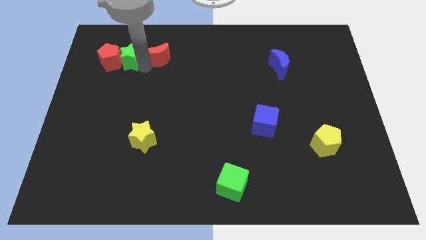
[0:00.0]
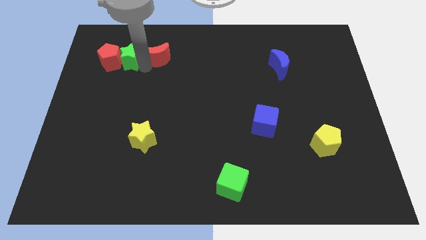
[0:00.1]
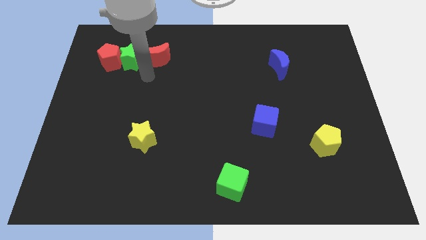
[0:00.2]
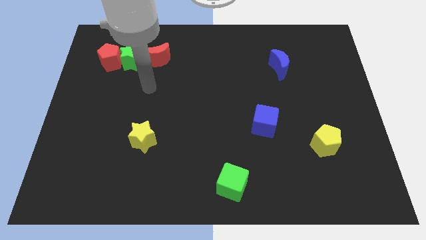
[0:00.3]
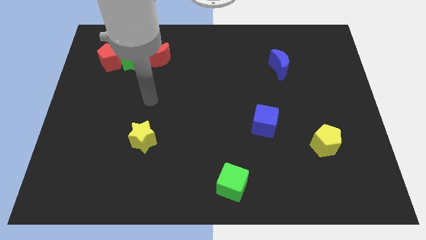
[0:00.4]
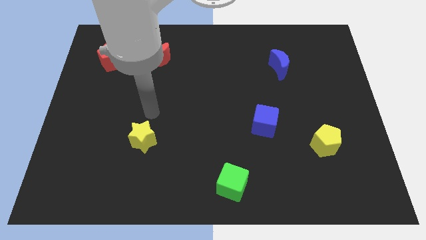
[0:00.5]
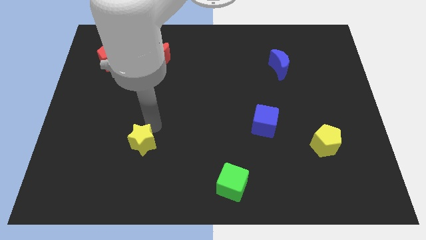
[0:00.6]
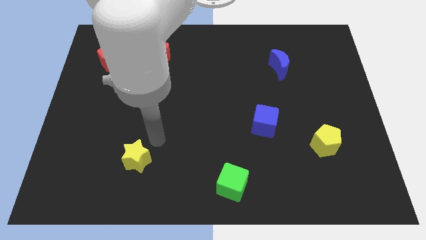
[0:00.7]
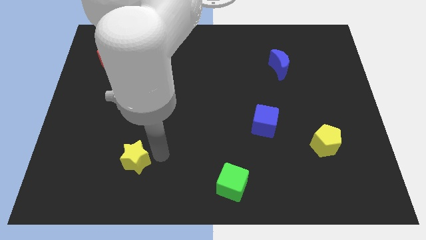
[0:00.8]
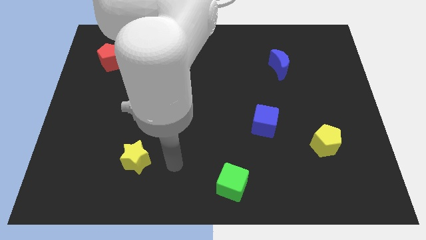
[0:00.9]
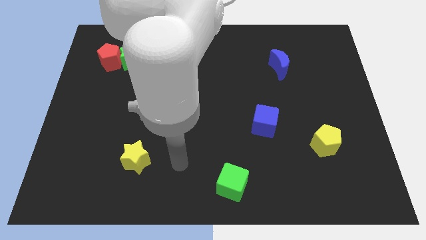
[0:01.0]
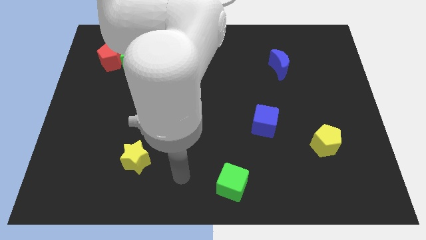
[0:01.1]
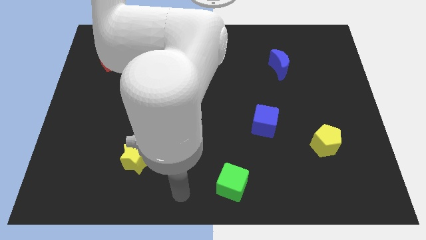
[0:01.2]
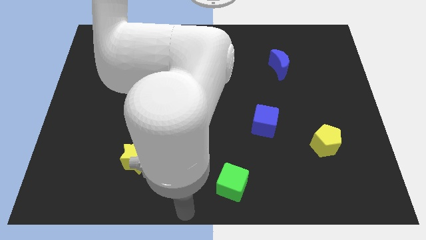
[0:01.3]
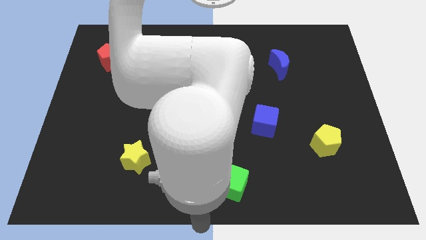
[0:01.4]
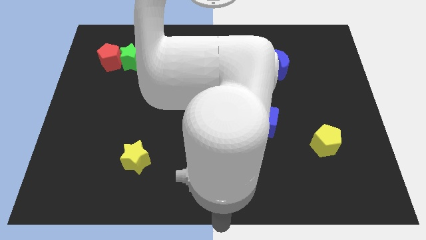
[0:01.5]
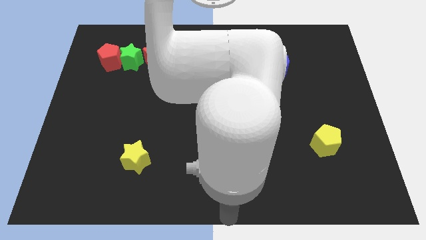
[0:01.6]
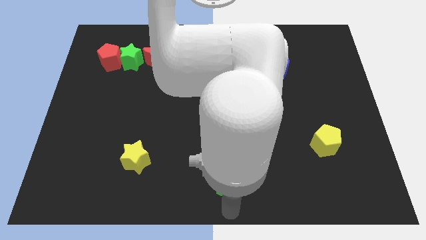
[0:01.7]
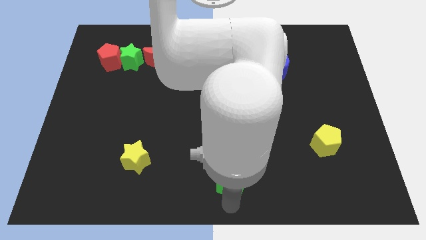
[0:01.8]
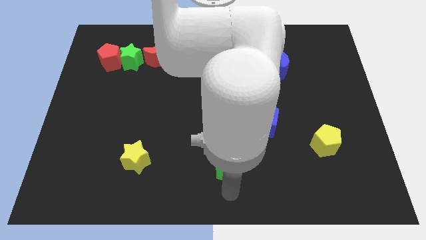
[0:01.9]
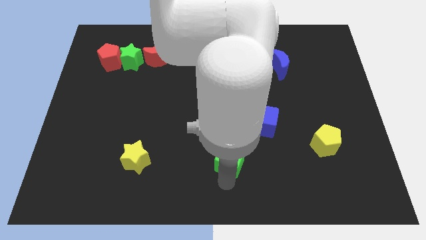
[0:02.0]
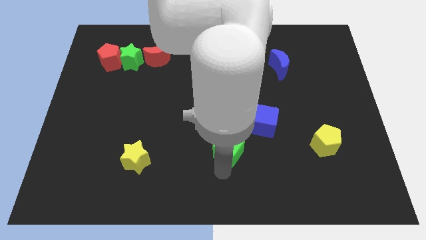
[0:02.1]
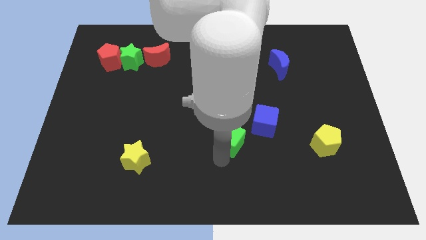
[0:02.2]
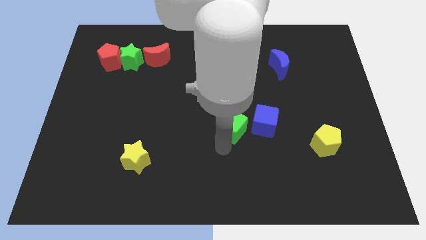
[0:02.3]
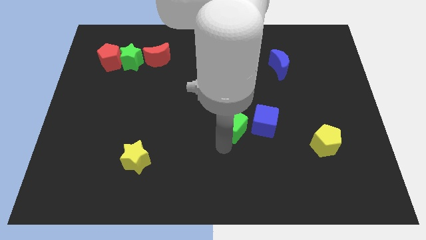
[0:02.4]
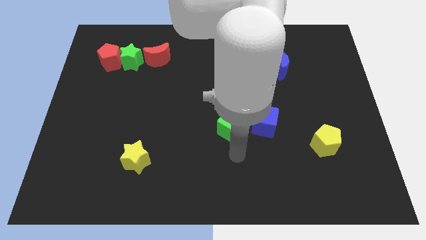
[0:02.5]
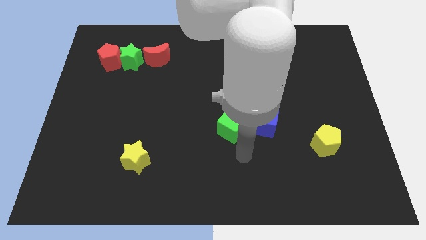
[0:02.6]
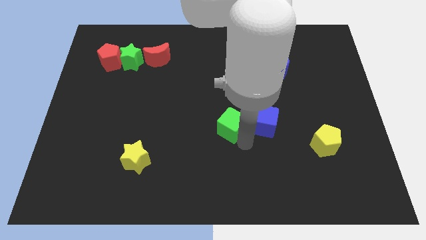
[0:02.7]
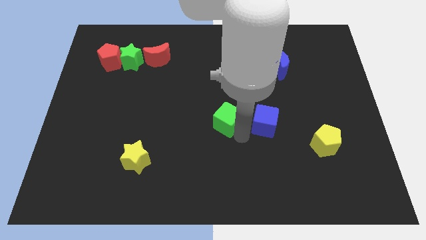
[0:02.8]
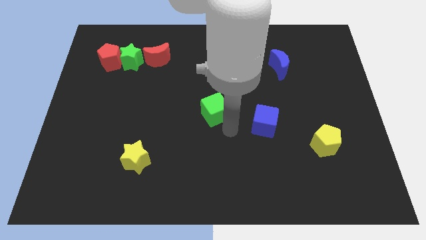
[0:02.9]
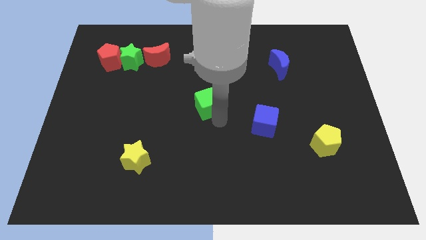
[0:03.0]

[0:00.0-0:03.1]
move green cube middle of the board

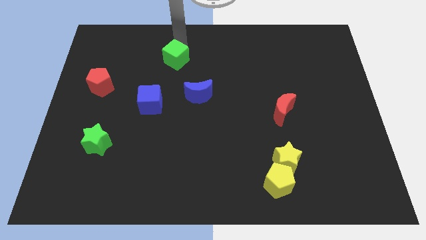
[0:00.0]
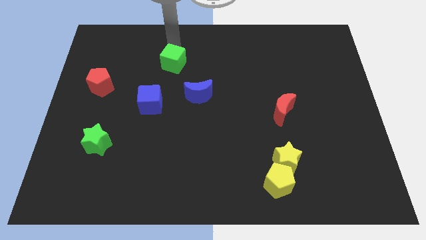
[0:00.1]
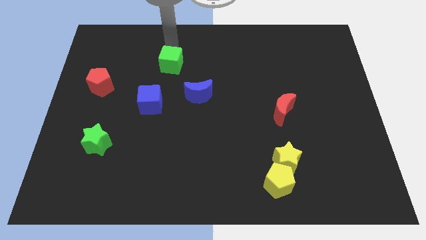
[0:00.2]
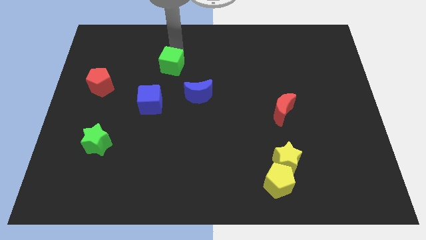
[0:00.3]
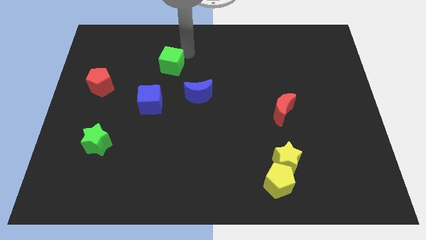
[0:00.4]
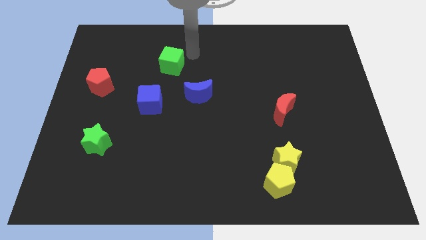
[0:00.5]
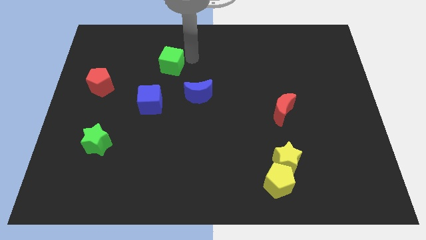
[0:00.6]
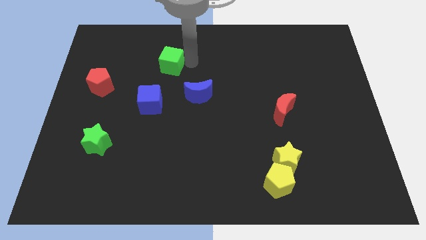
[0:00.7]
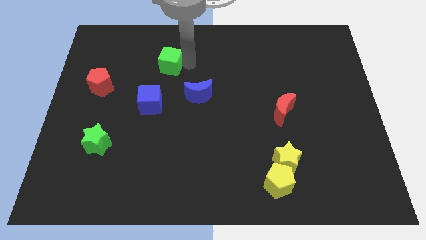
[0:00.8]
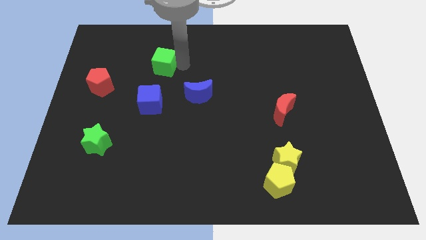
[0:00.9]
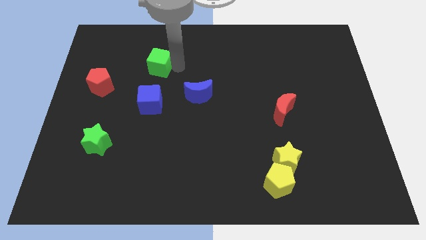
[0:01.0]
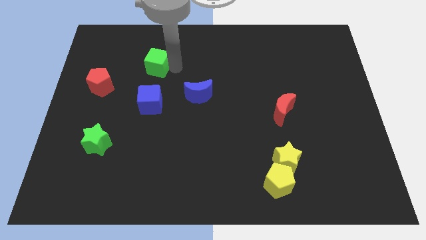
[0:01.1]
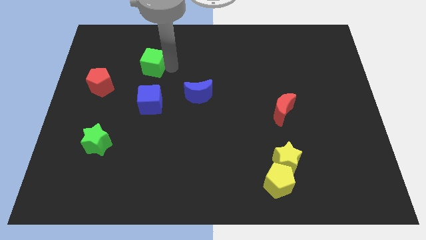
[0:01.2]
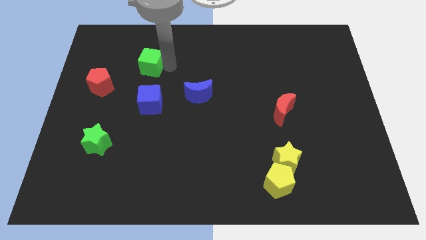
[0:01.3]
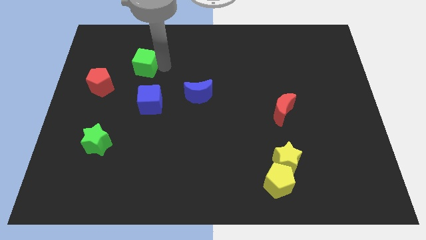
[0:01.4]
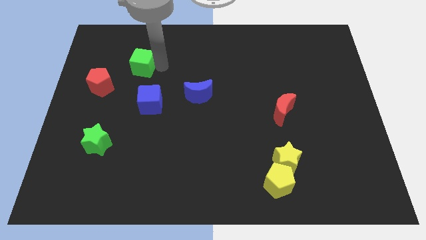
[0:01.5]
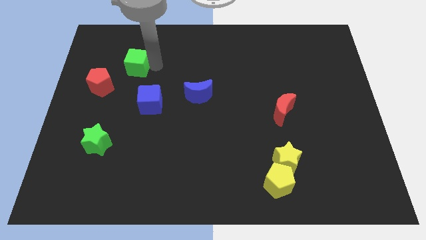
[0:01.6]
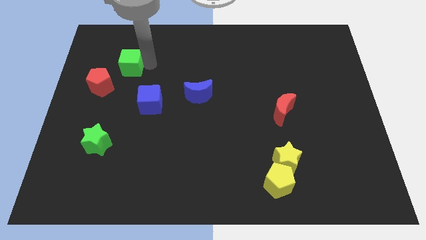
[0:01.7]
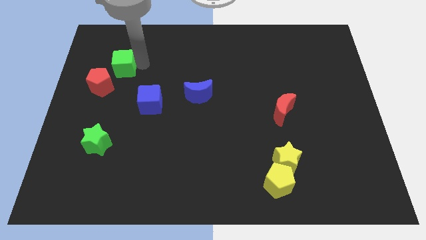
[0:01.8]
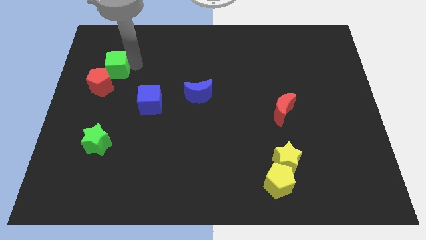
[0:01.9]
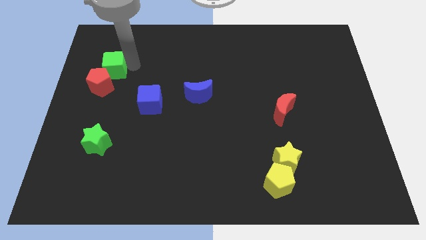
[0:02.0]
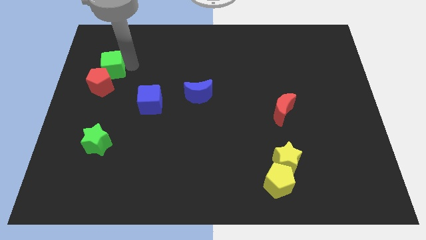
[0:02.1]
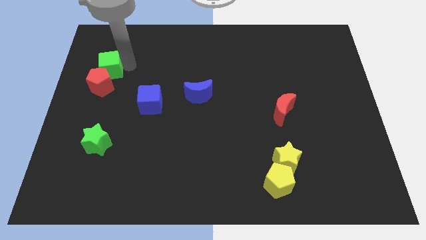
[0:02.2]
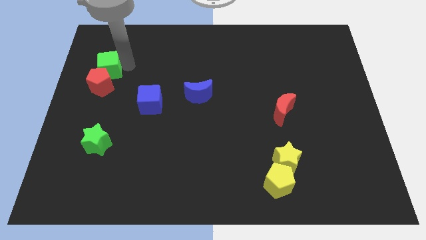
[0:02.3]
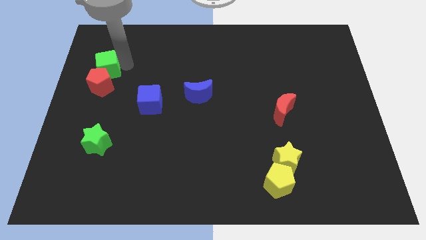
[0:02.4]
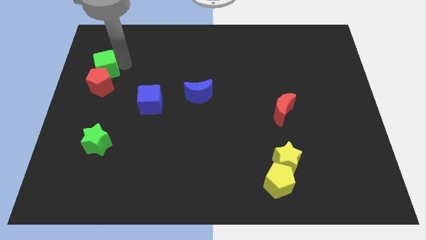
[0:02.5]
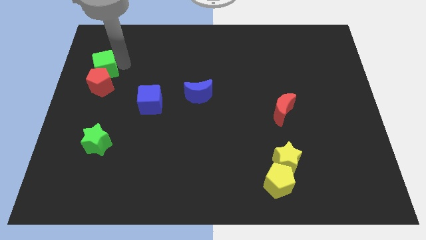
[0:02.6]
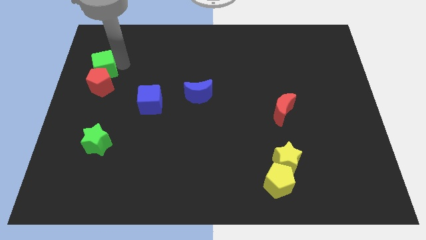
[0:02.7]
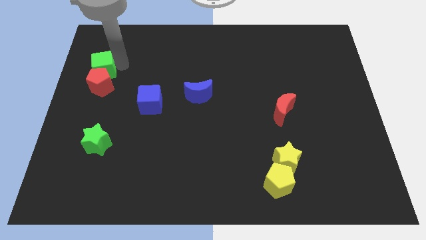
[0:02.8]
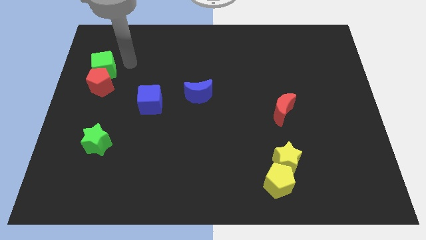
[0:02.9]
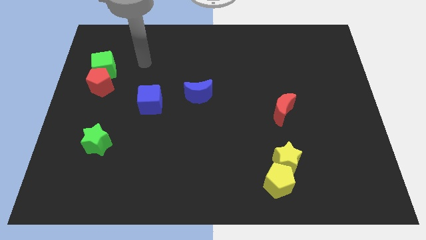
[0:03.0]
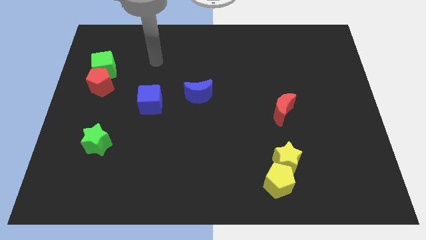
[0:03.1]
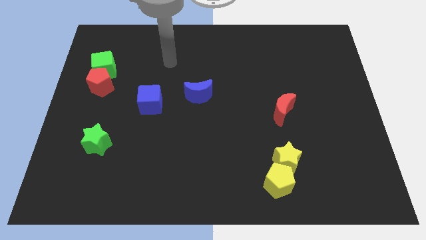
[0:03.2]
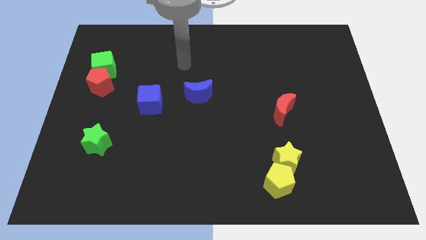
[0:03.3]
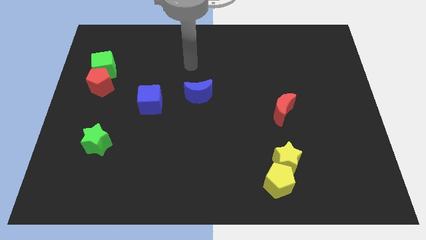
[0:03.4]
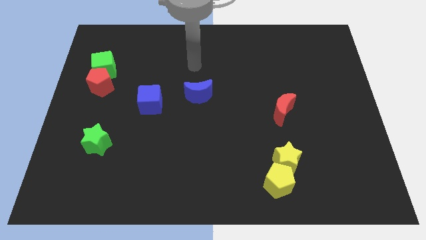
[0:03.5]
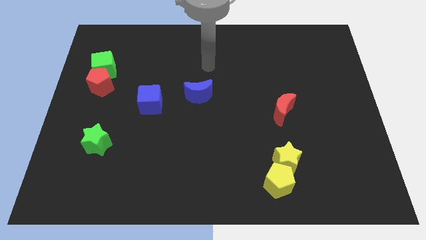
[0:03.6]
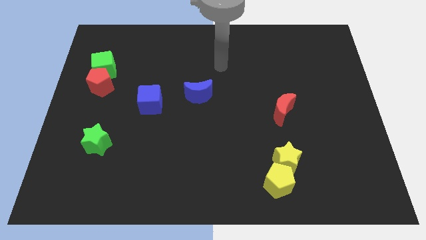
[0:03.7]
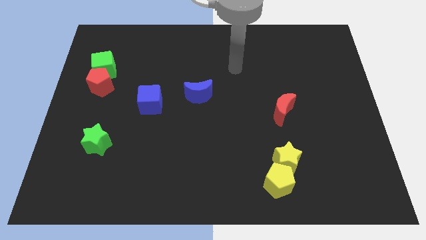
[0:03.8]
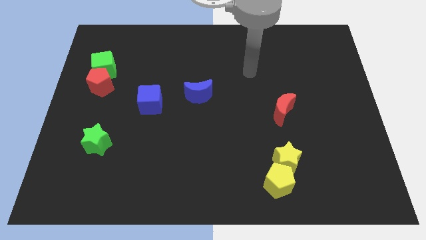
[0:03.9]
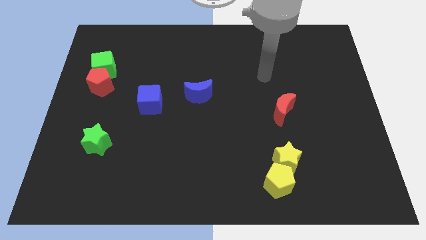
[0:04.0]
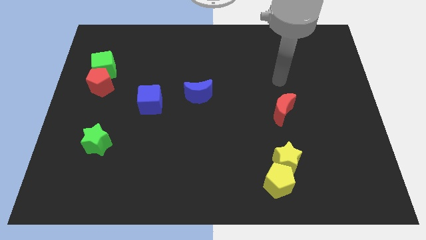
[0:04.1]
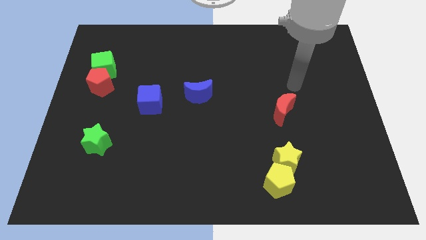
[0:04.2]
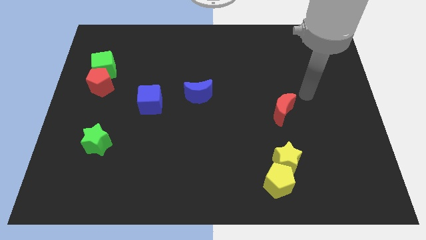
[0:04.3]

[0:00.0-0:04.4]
move the green cube to the top side of the red pentagon

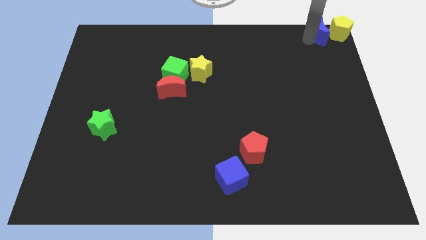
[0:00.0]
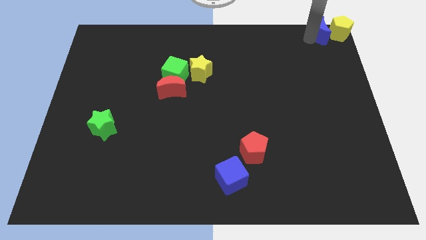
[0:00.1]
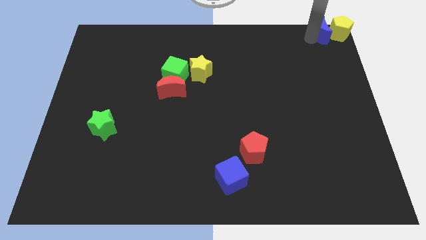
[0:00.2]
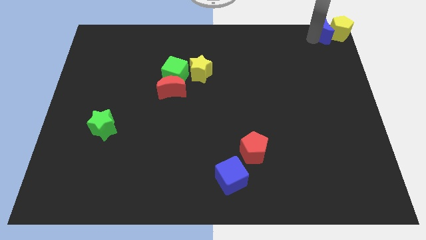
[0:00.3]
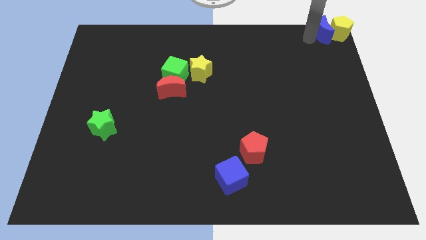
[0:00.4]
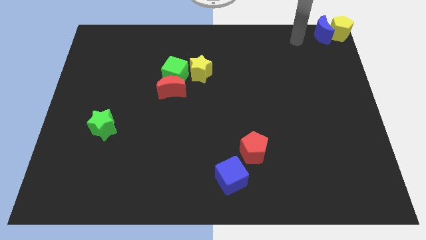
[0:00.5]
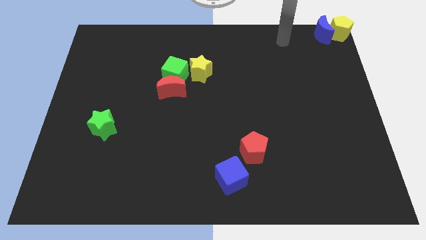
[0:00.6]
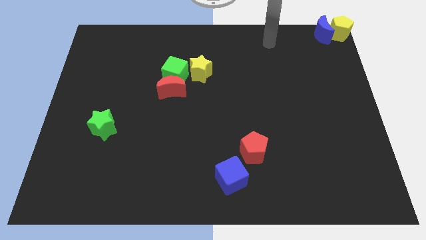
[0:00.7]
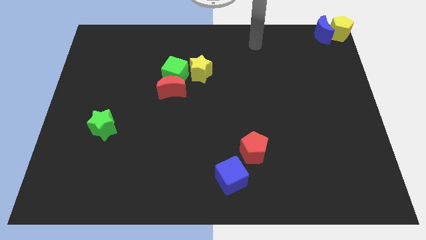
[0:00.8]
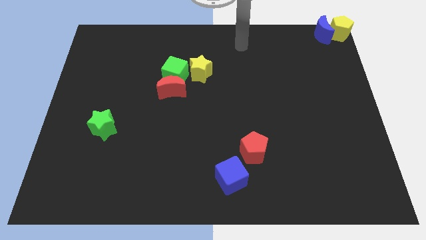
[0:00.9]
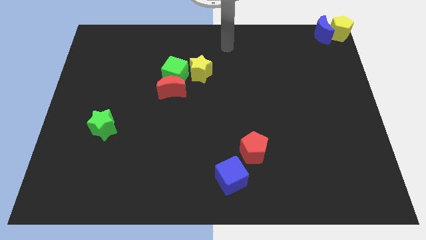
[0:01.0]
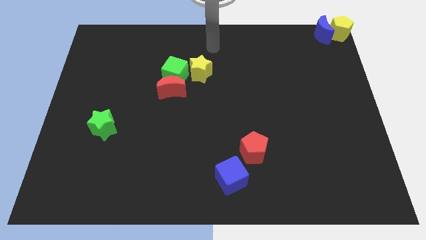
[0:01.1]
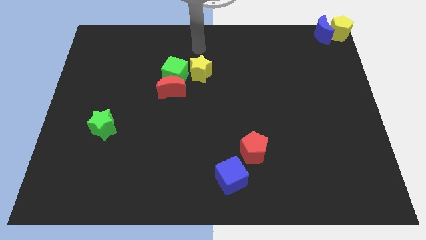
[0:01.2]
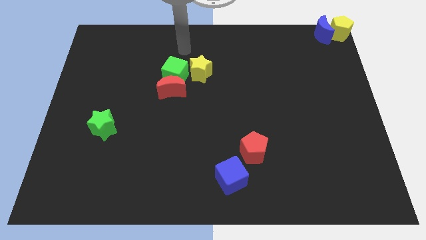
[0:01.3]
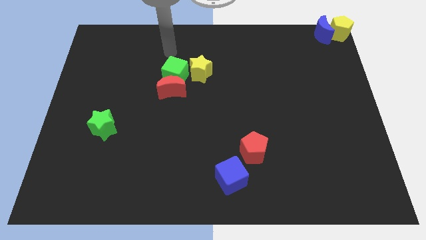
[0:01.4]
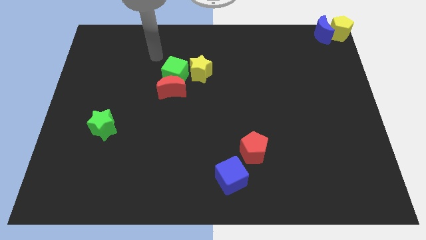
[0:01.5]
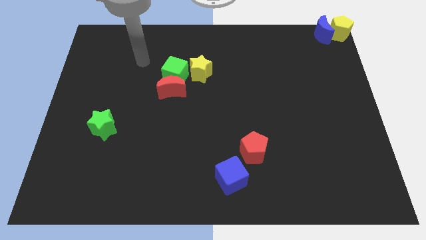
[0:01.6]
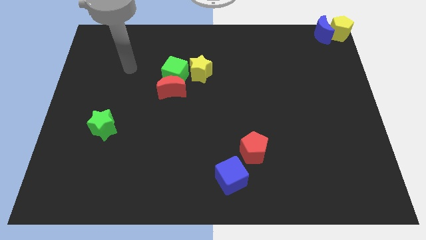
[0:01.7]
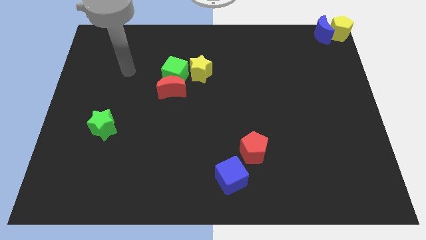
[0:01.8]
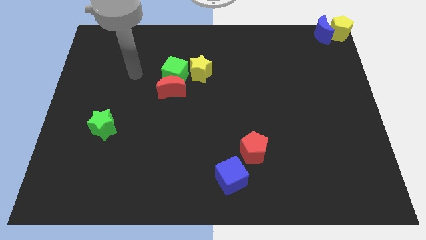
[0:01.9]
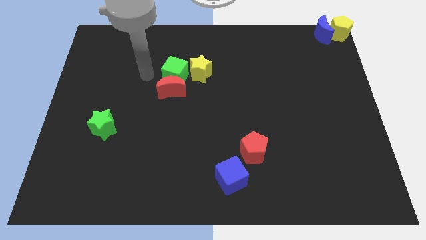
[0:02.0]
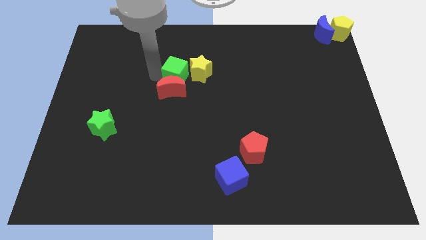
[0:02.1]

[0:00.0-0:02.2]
place your arm at the left of green cube
